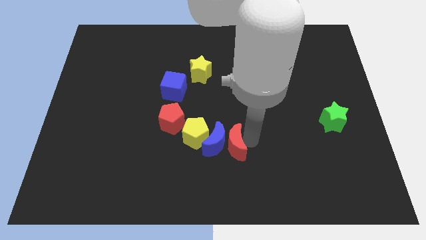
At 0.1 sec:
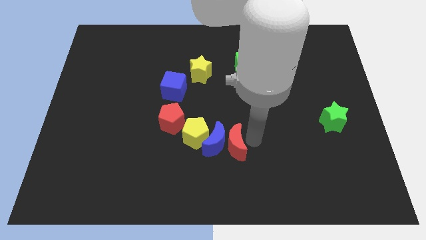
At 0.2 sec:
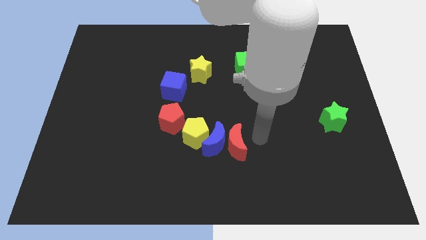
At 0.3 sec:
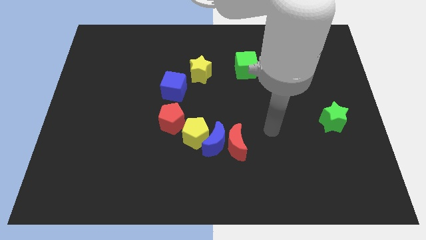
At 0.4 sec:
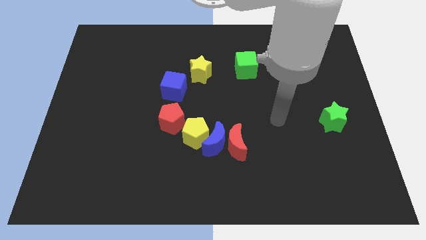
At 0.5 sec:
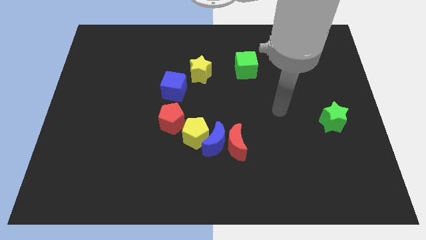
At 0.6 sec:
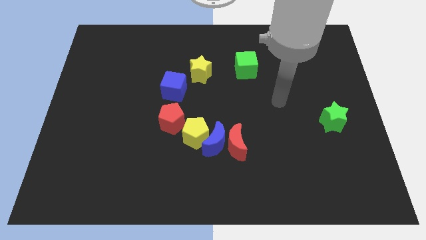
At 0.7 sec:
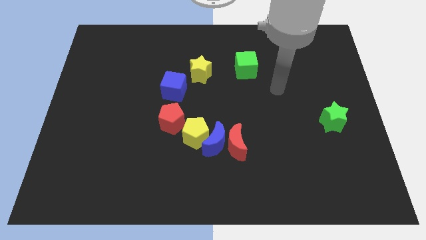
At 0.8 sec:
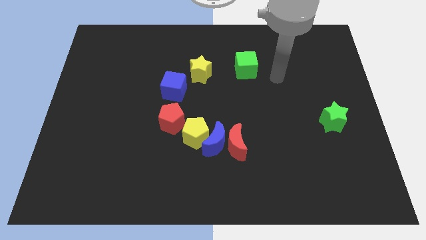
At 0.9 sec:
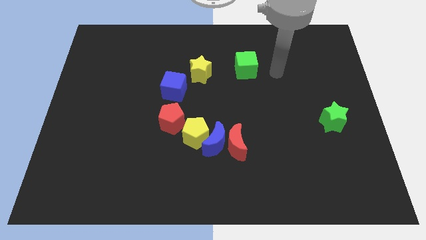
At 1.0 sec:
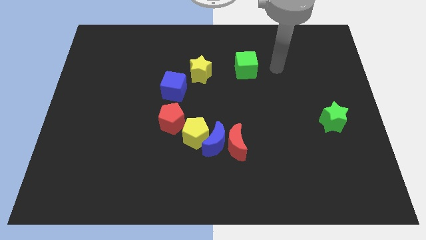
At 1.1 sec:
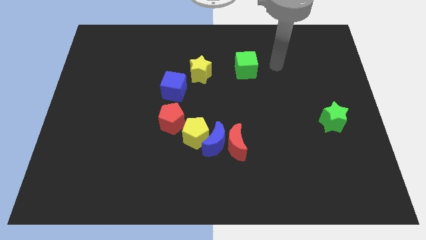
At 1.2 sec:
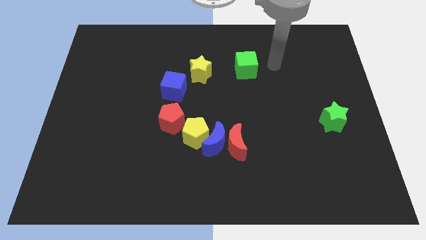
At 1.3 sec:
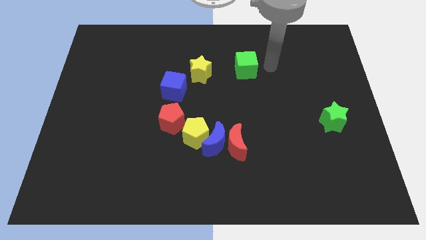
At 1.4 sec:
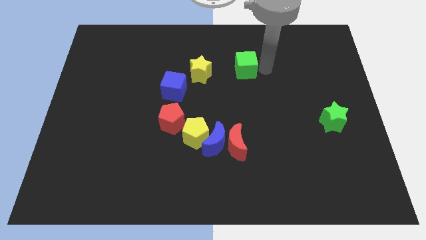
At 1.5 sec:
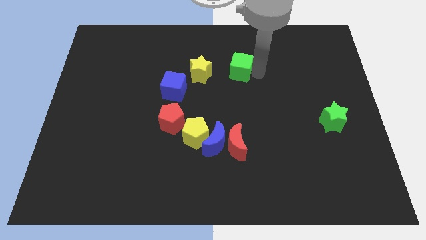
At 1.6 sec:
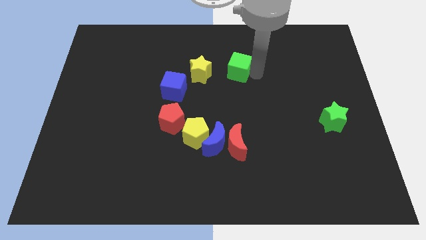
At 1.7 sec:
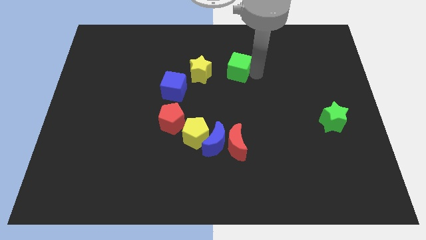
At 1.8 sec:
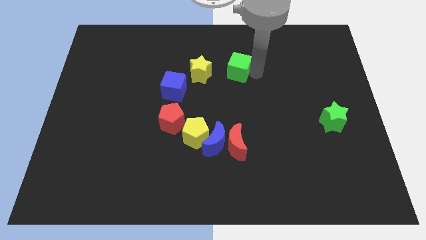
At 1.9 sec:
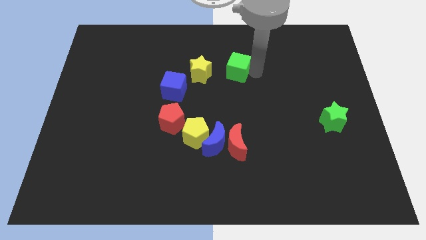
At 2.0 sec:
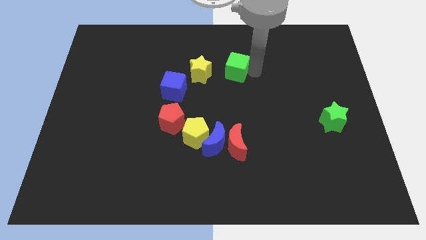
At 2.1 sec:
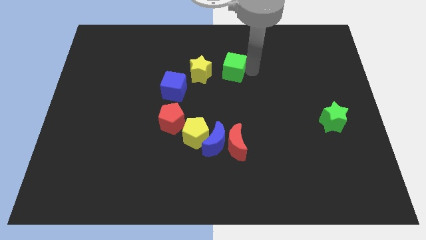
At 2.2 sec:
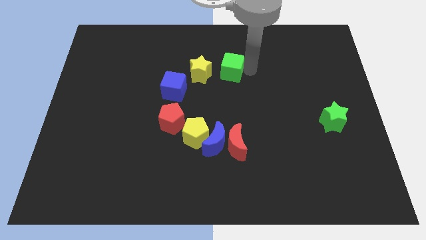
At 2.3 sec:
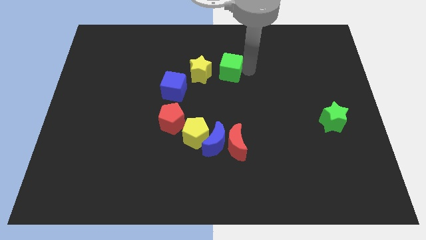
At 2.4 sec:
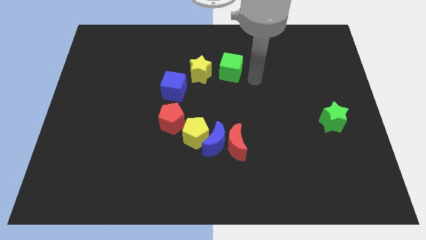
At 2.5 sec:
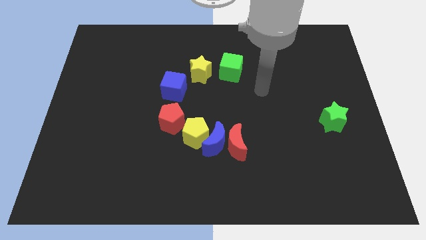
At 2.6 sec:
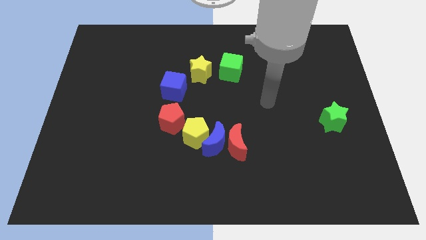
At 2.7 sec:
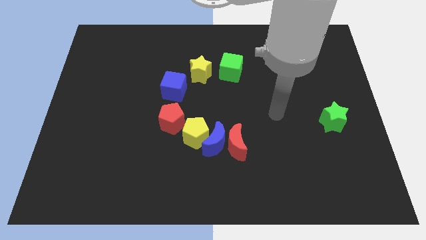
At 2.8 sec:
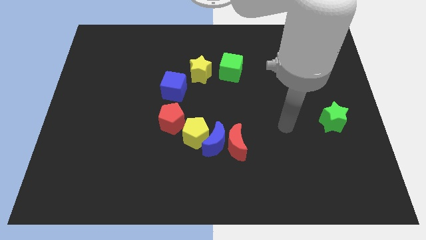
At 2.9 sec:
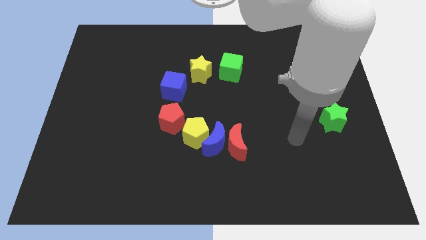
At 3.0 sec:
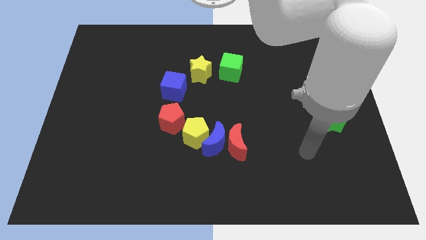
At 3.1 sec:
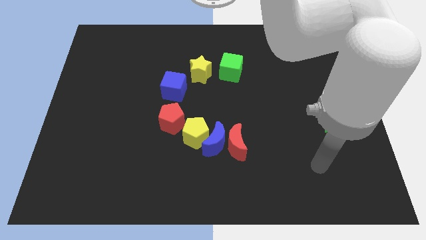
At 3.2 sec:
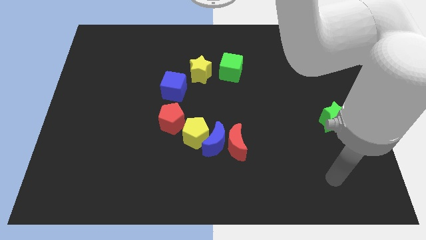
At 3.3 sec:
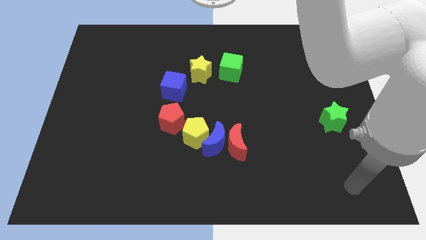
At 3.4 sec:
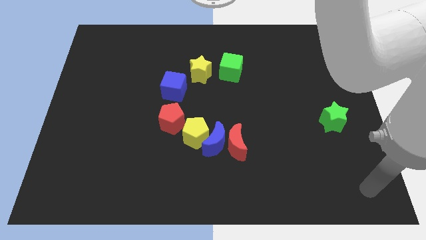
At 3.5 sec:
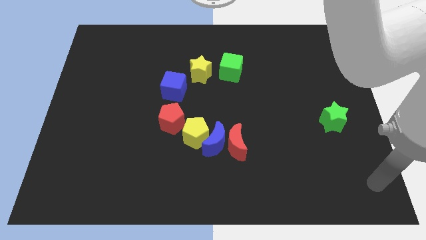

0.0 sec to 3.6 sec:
move away from the red crescent

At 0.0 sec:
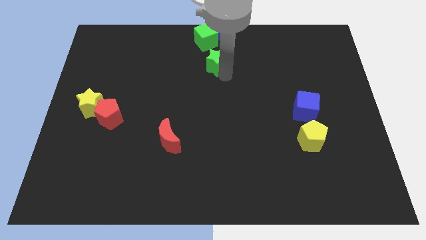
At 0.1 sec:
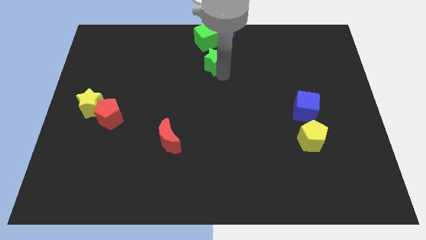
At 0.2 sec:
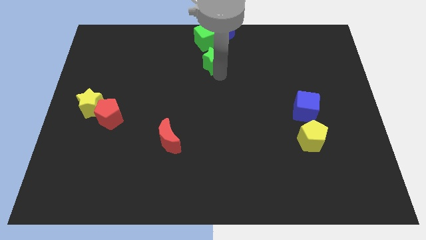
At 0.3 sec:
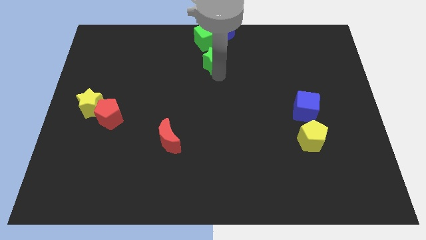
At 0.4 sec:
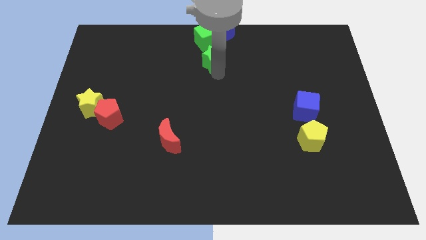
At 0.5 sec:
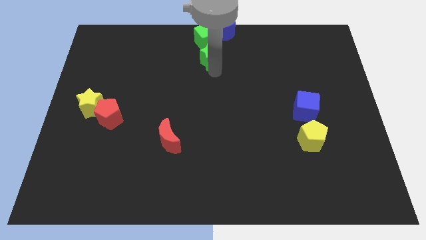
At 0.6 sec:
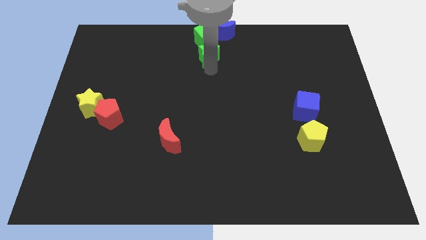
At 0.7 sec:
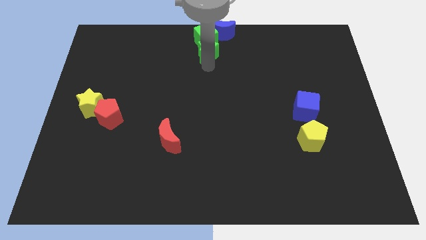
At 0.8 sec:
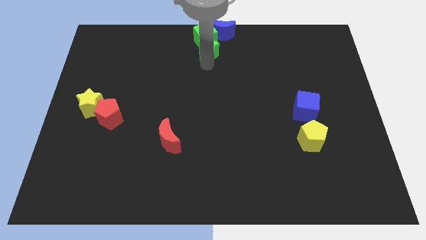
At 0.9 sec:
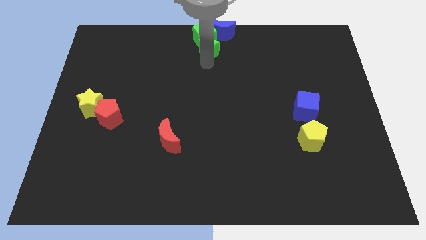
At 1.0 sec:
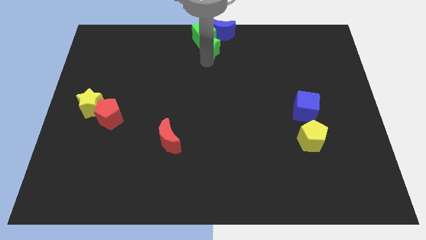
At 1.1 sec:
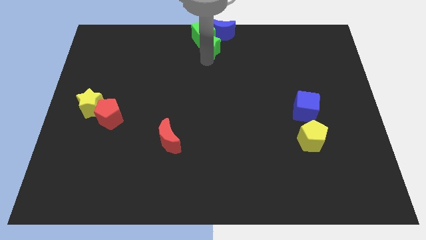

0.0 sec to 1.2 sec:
place green star towards green cube

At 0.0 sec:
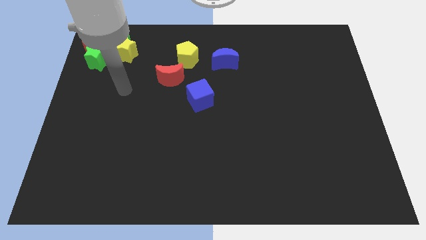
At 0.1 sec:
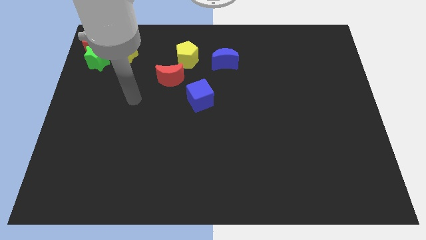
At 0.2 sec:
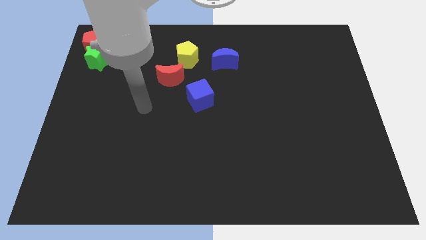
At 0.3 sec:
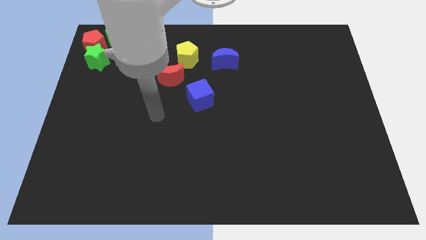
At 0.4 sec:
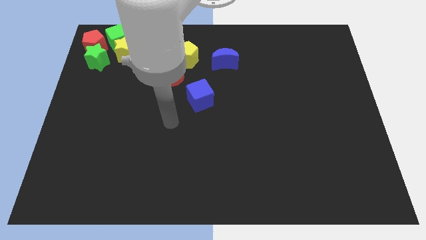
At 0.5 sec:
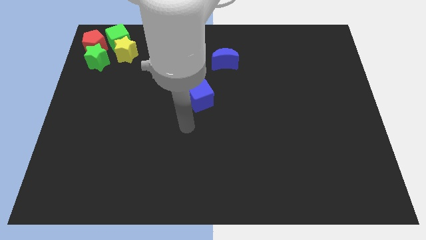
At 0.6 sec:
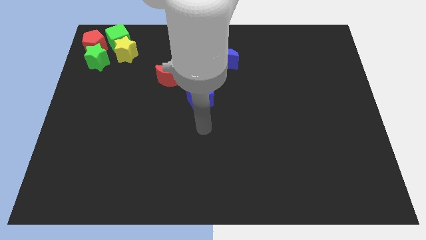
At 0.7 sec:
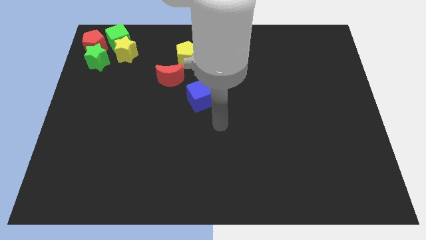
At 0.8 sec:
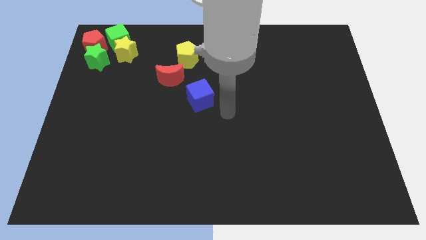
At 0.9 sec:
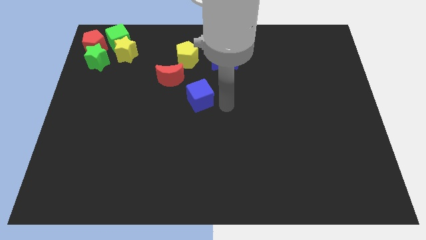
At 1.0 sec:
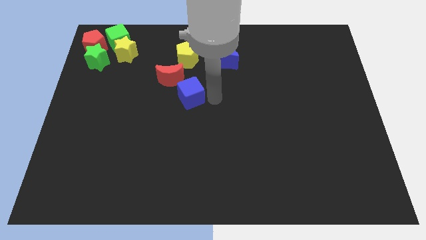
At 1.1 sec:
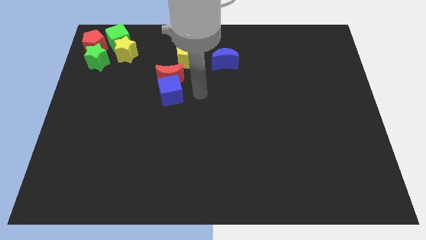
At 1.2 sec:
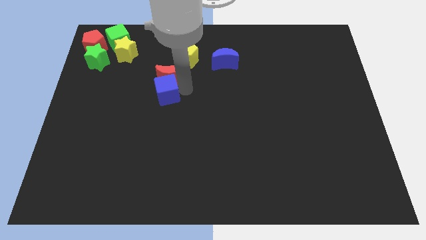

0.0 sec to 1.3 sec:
move the blue cube to the bottom of the red crescent on the board

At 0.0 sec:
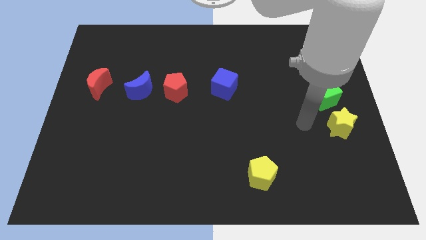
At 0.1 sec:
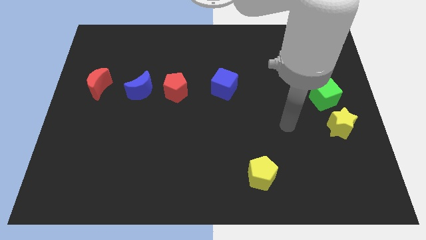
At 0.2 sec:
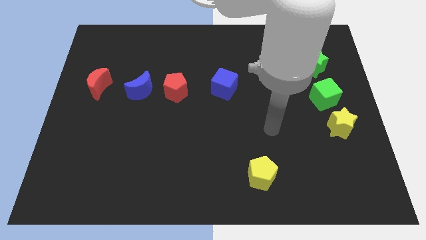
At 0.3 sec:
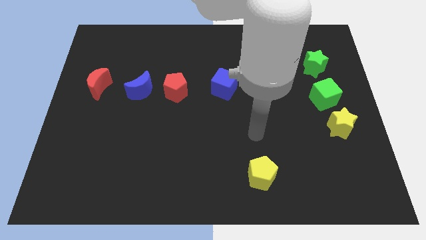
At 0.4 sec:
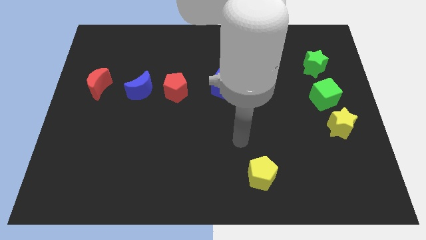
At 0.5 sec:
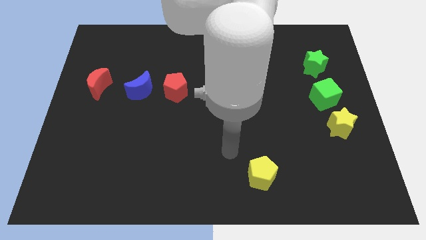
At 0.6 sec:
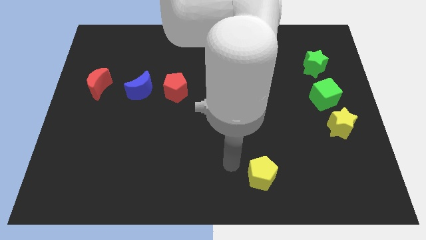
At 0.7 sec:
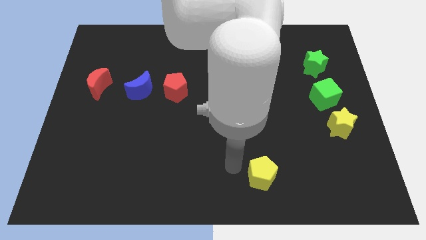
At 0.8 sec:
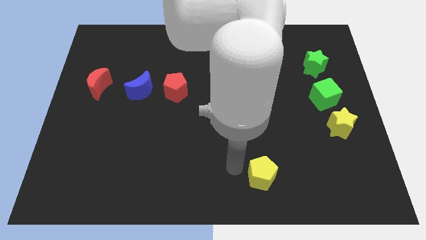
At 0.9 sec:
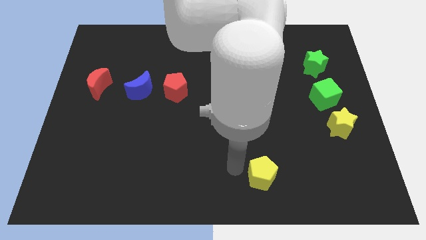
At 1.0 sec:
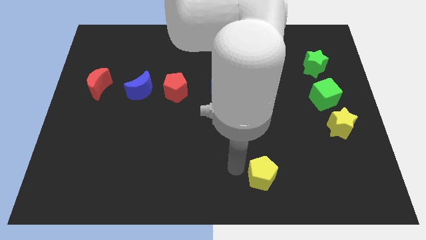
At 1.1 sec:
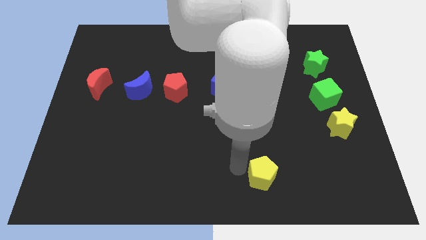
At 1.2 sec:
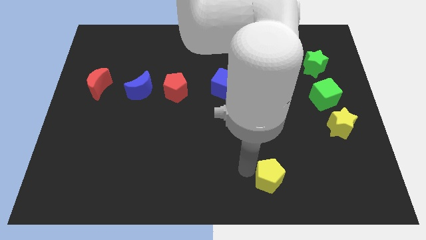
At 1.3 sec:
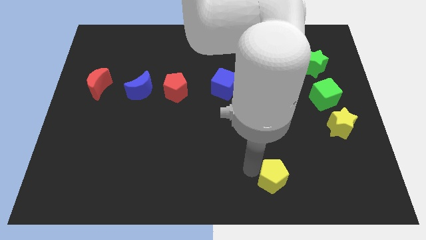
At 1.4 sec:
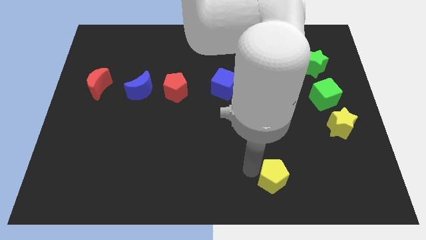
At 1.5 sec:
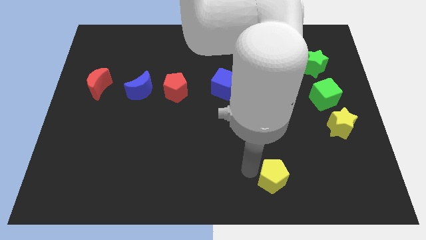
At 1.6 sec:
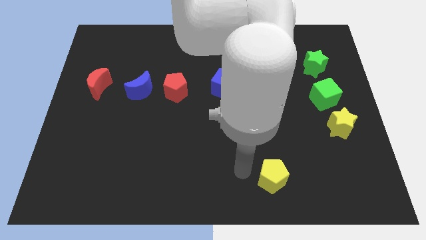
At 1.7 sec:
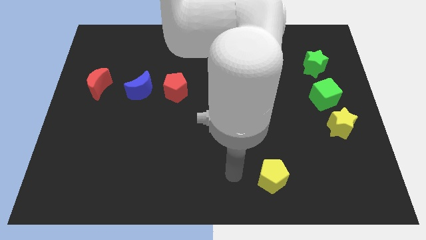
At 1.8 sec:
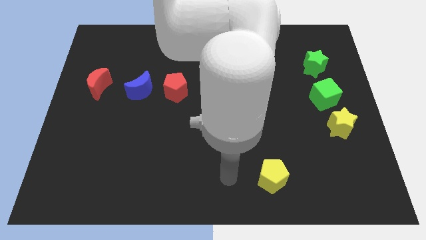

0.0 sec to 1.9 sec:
slightly move yellow star to the right

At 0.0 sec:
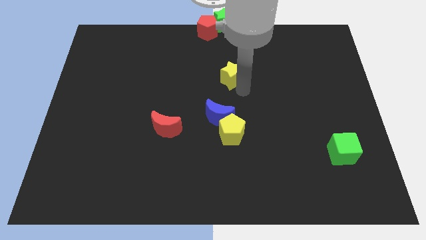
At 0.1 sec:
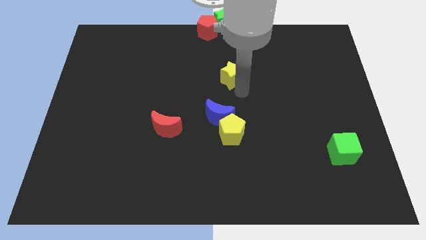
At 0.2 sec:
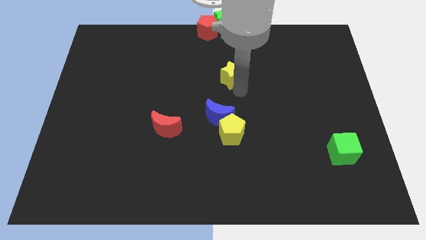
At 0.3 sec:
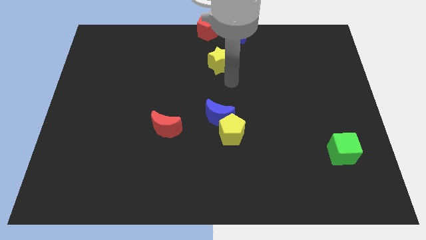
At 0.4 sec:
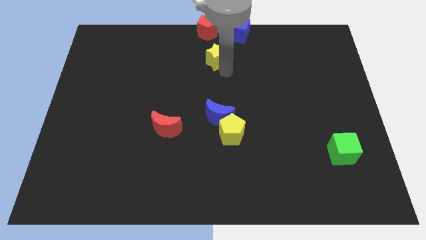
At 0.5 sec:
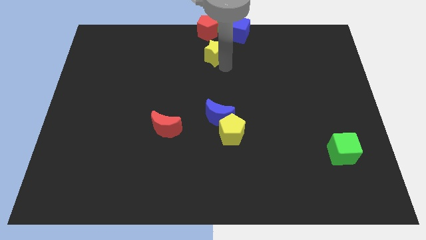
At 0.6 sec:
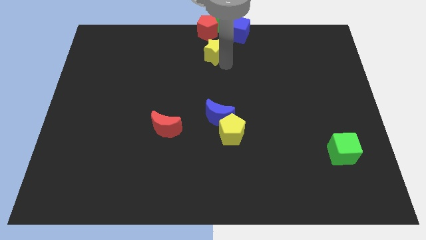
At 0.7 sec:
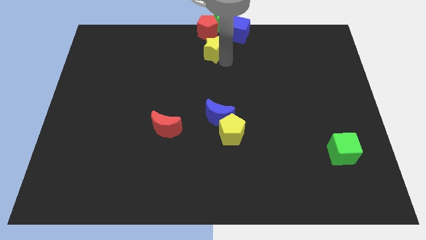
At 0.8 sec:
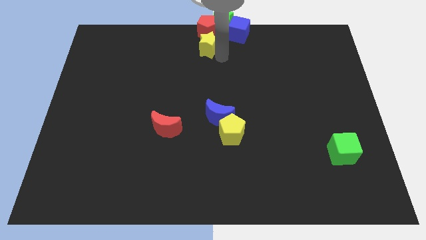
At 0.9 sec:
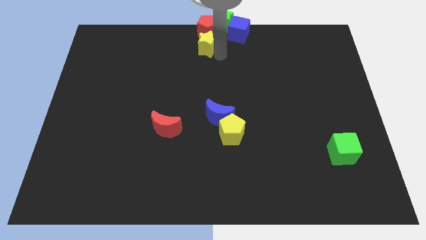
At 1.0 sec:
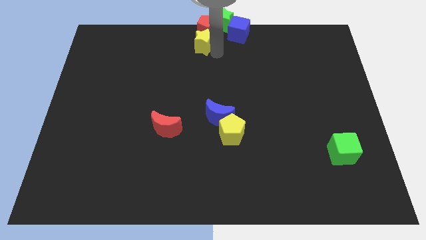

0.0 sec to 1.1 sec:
move the yellow star to the bottom of the red pentagon
